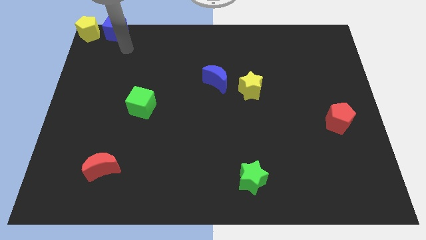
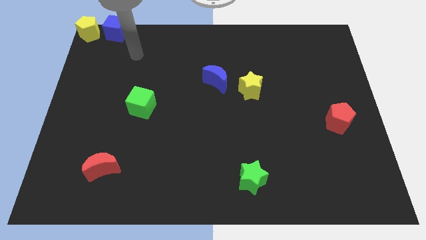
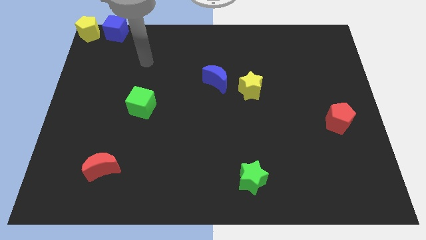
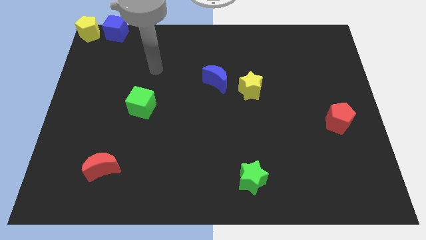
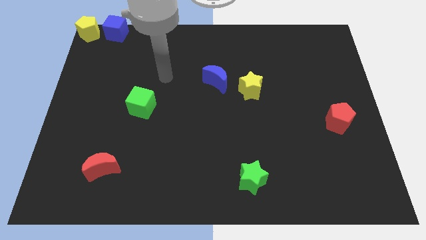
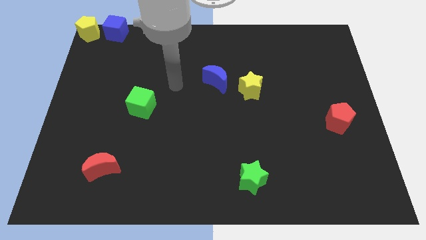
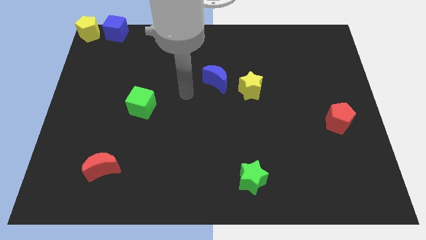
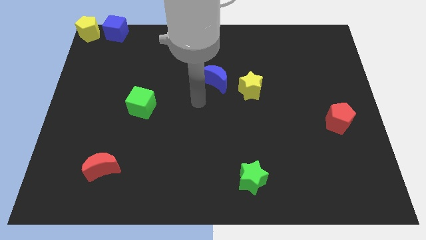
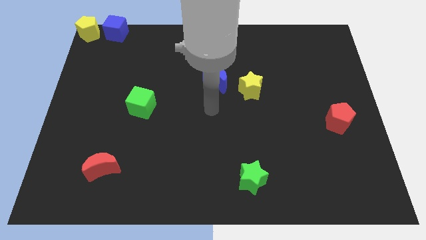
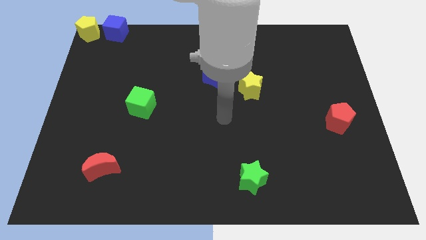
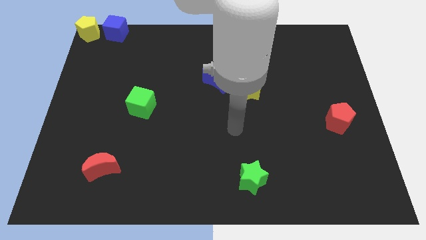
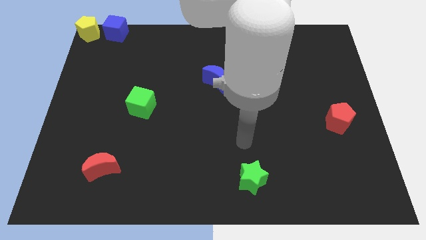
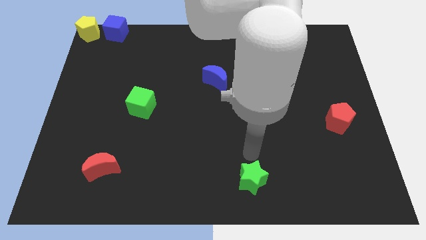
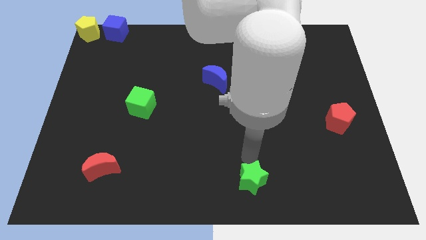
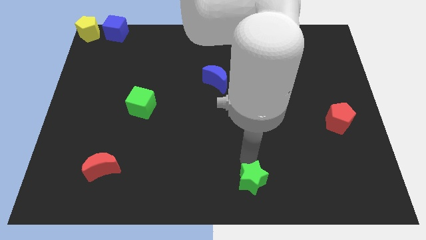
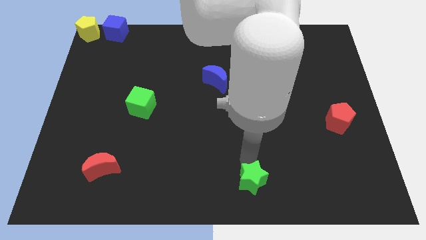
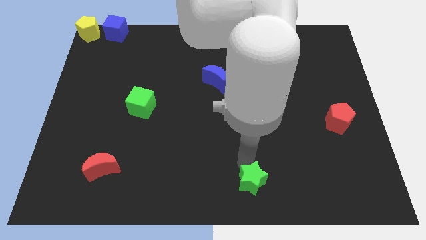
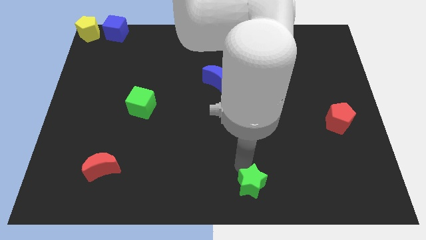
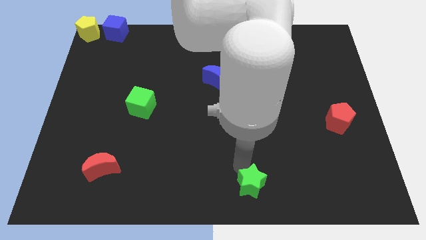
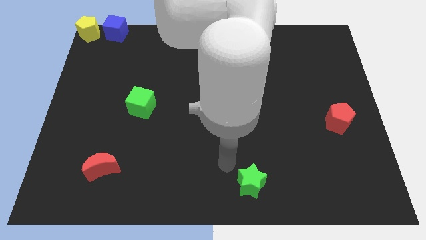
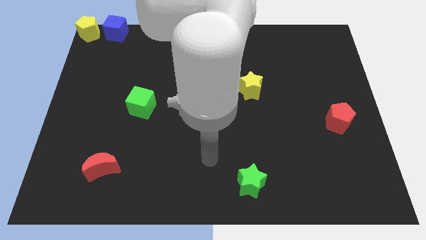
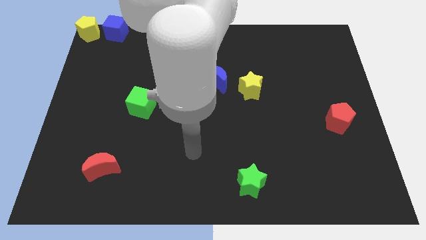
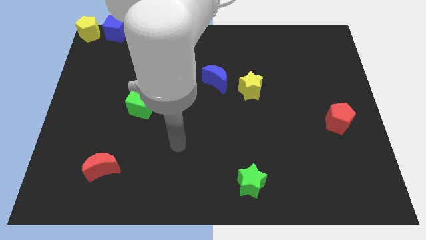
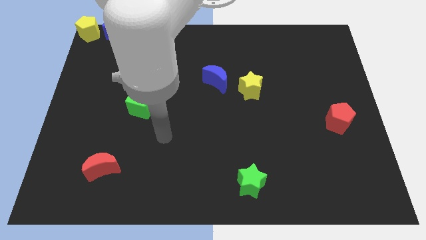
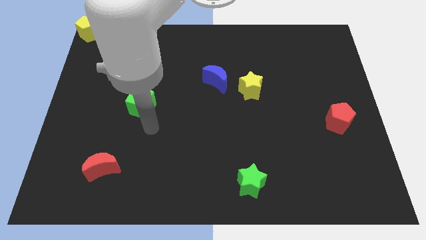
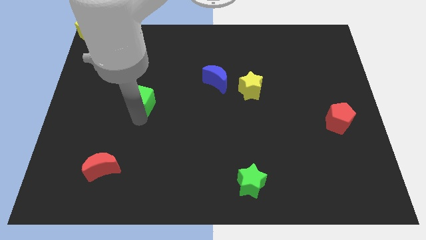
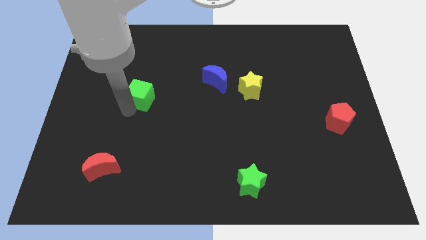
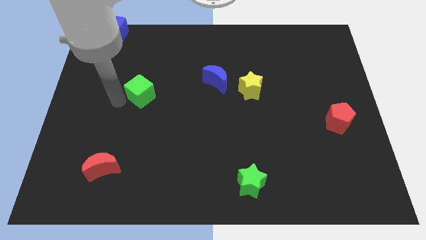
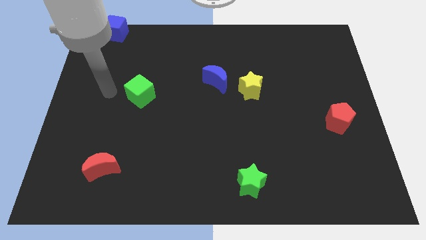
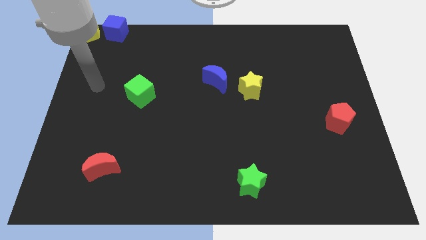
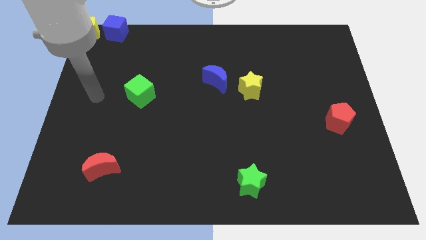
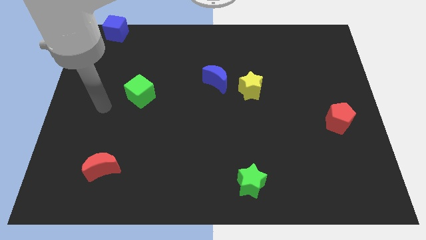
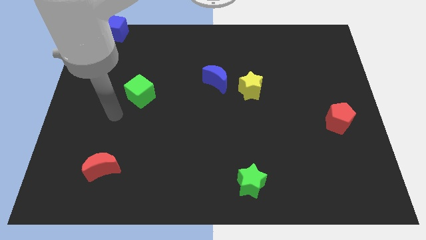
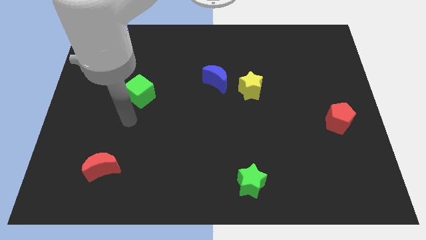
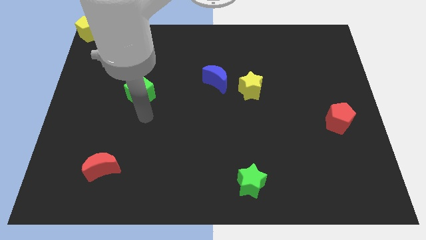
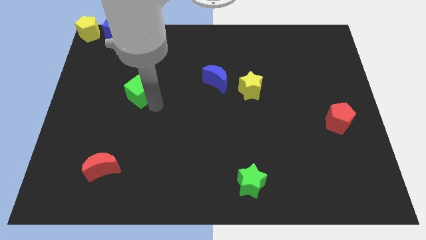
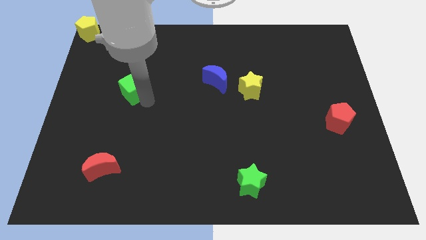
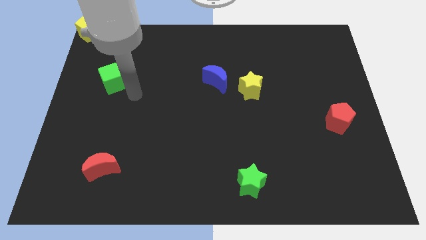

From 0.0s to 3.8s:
drag the green cube vertically above the red moon

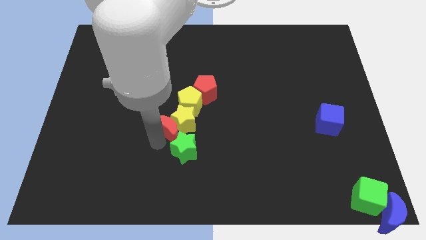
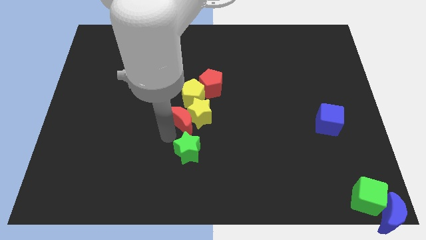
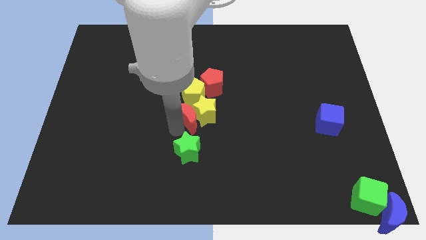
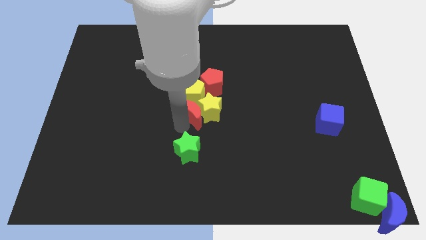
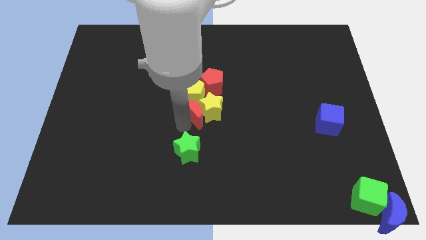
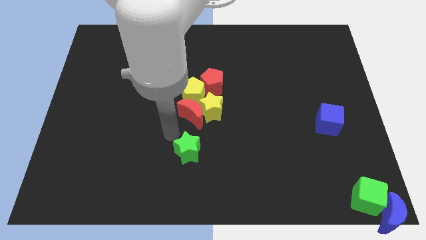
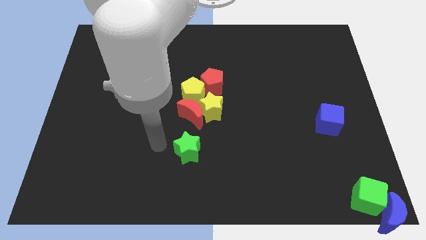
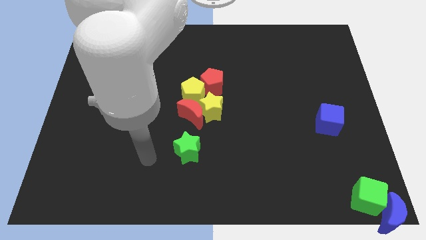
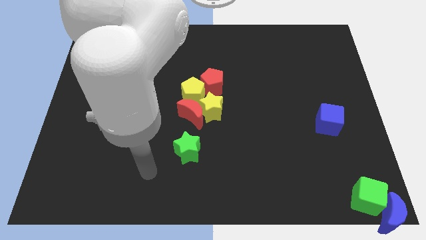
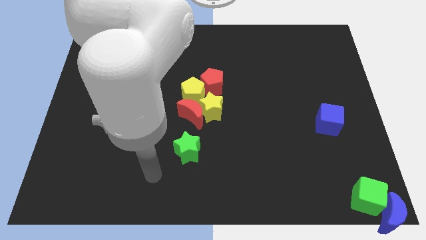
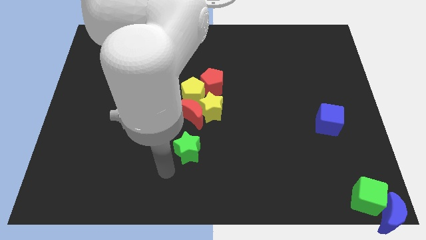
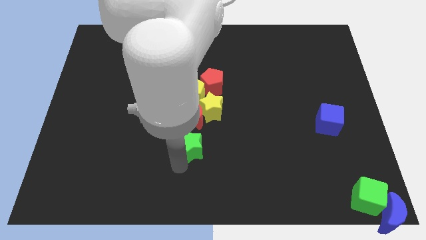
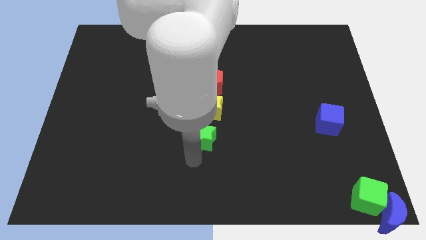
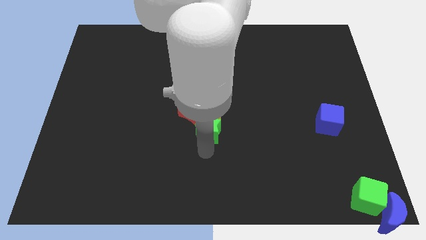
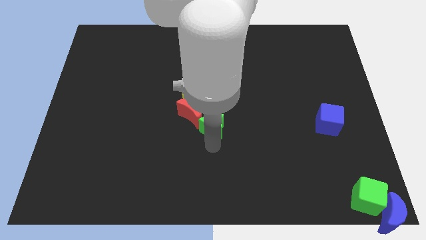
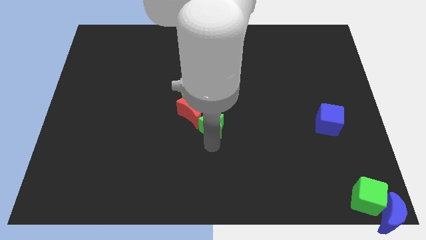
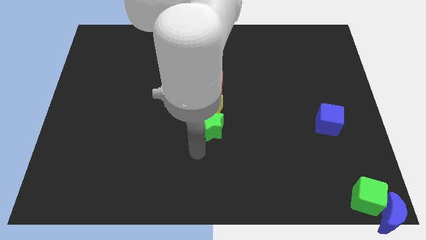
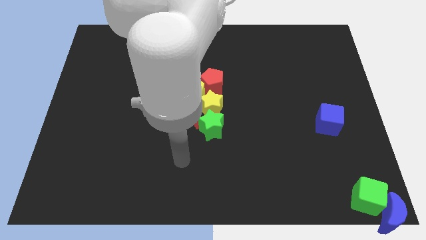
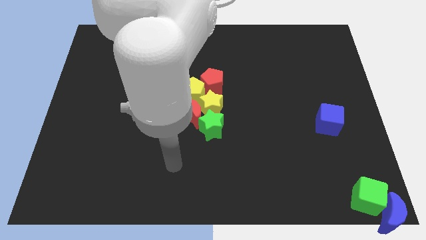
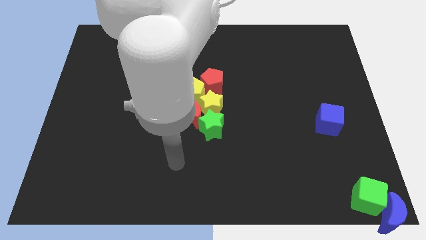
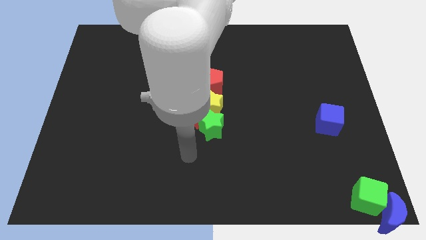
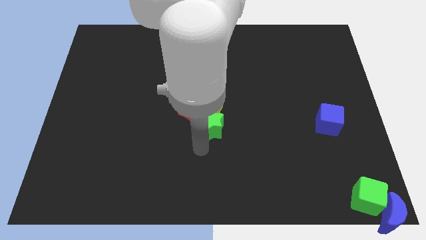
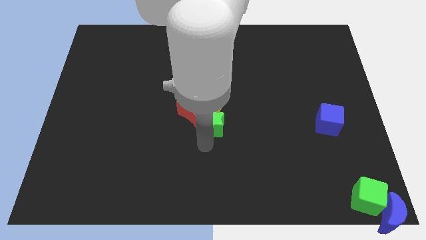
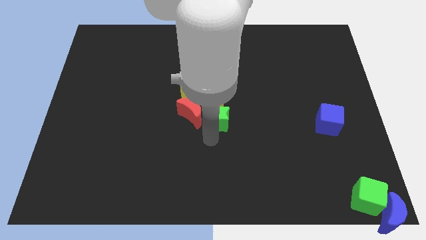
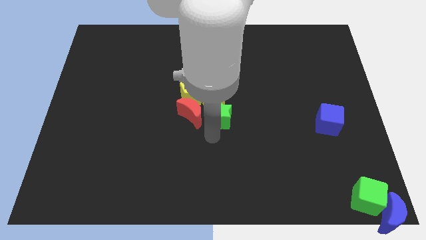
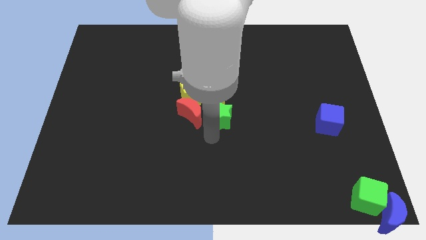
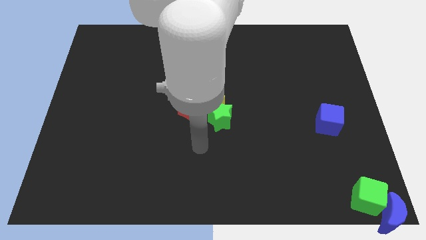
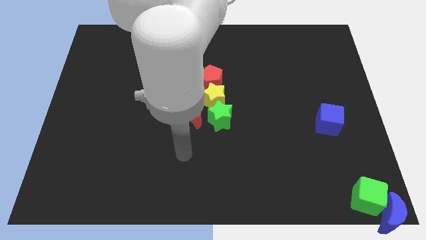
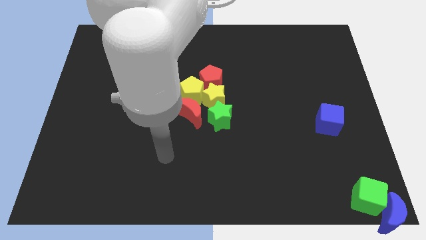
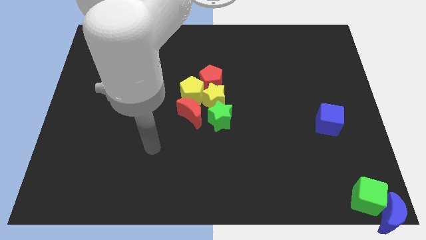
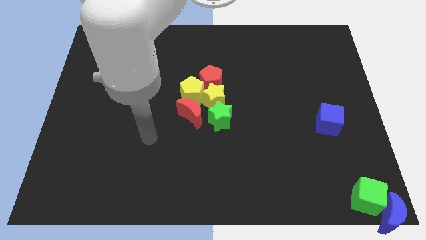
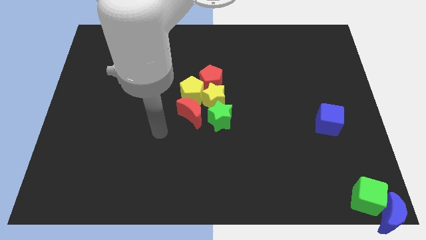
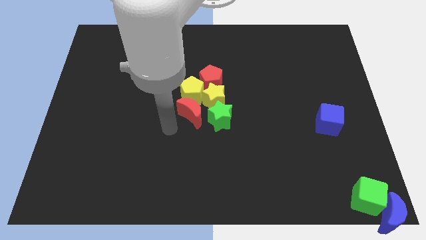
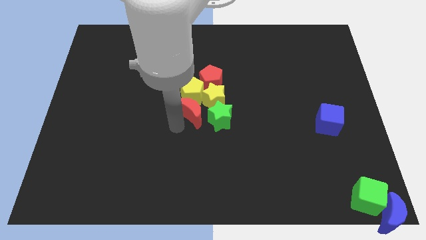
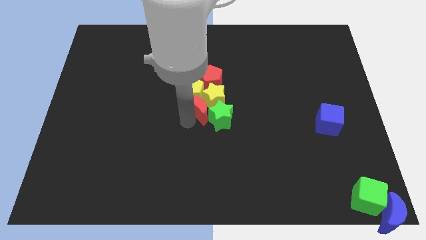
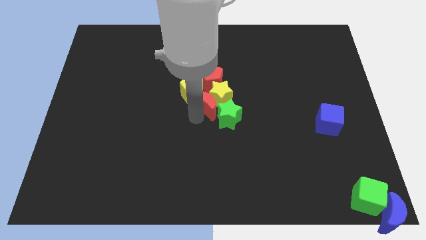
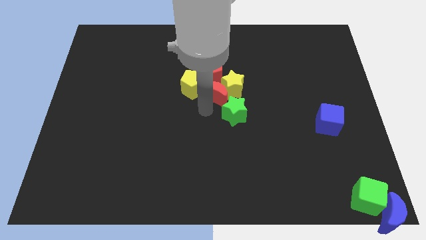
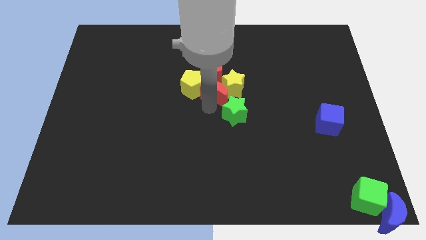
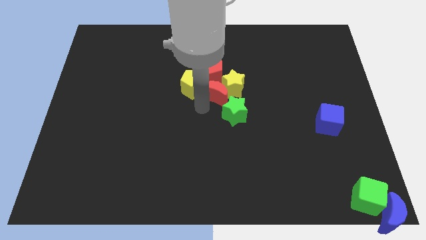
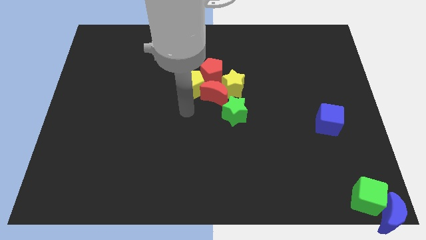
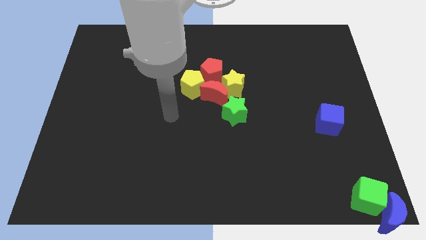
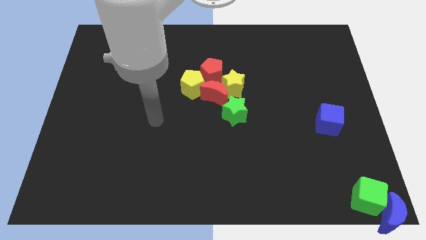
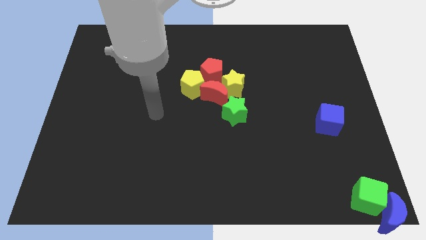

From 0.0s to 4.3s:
move the green star and red moon in the group of block

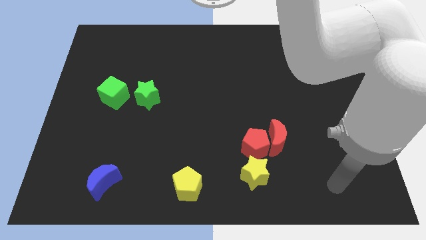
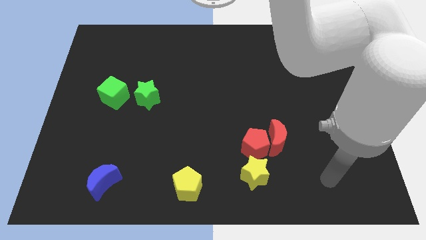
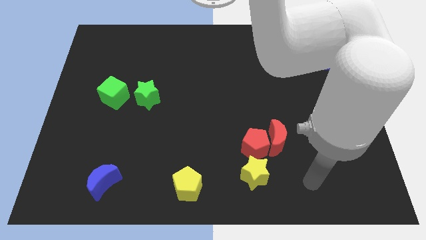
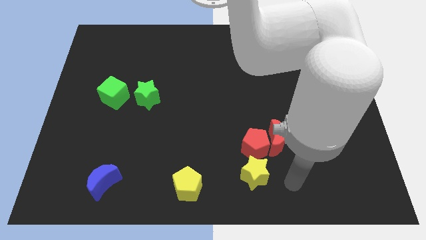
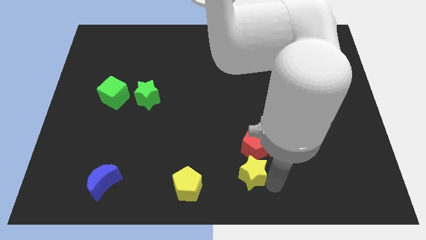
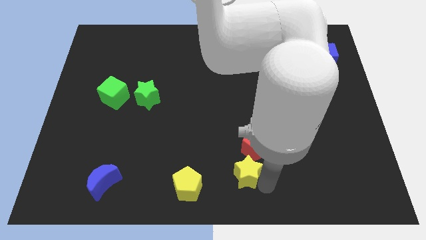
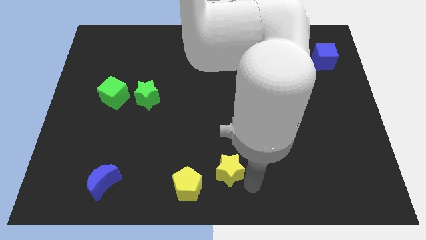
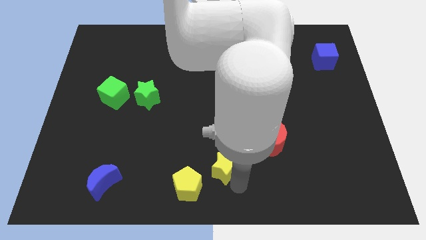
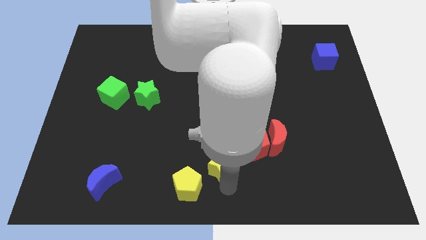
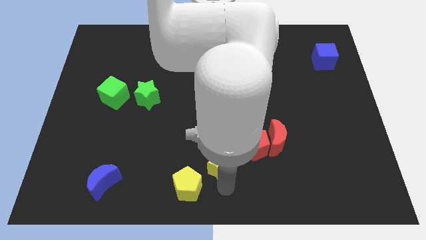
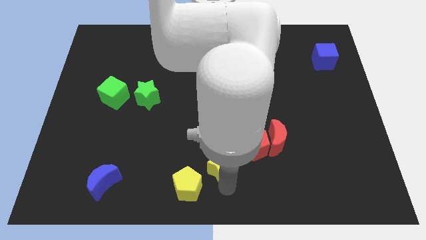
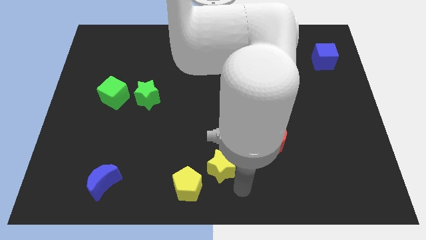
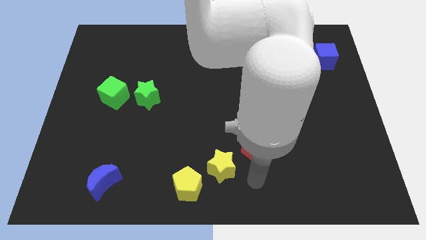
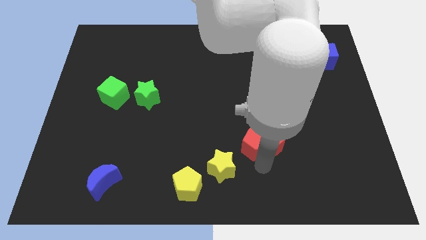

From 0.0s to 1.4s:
move the yellow star between the red pentagon and yellow pentagon
